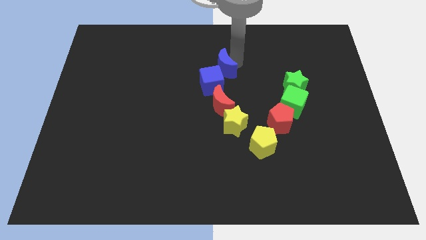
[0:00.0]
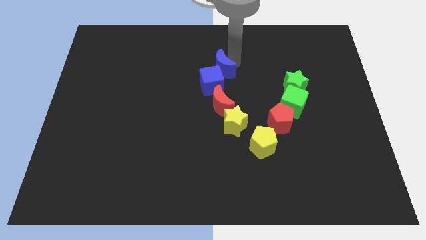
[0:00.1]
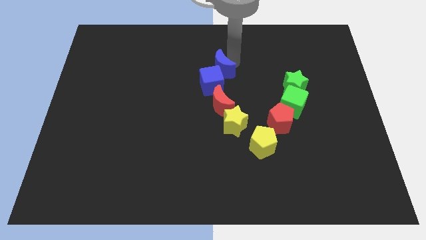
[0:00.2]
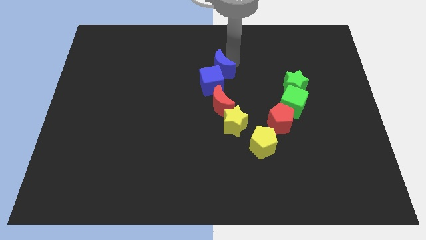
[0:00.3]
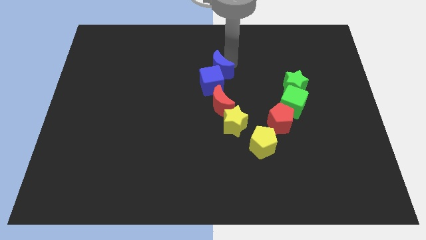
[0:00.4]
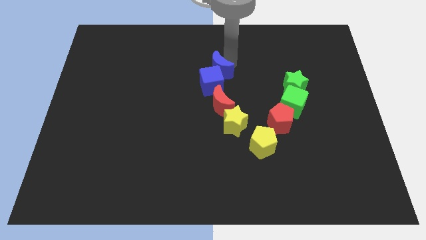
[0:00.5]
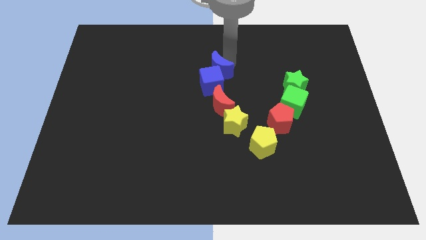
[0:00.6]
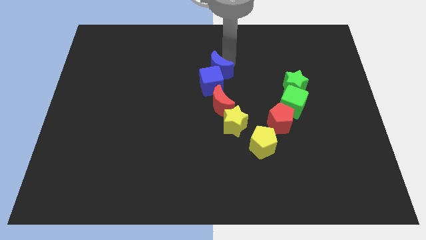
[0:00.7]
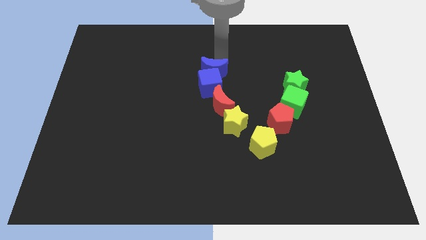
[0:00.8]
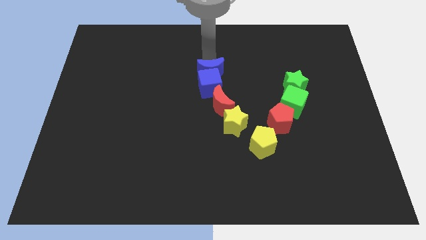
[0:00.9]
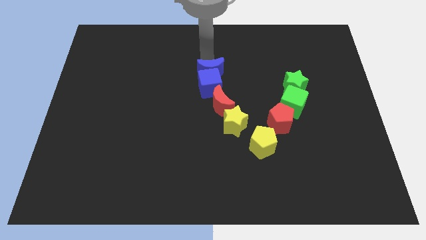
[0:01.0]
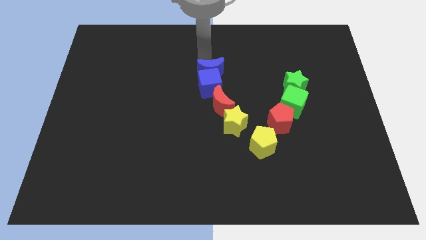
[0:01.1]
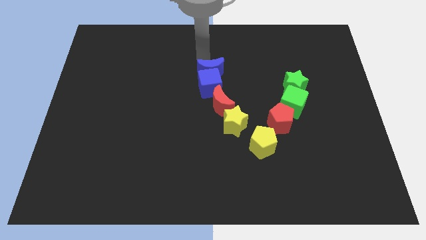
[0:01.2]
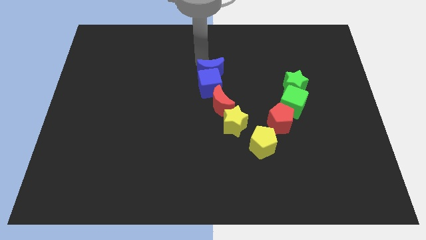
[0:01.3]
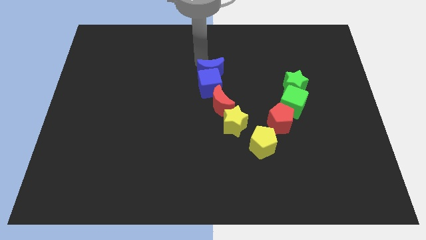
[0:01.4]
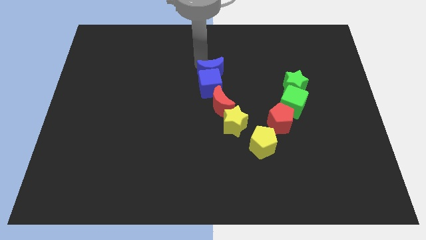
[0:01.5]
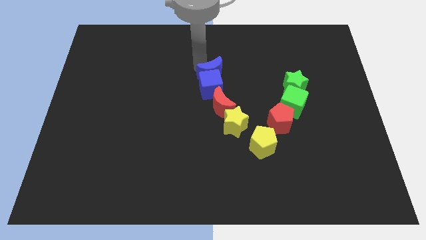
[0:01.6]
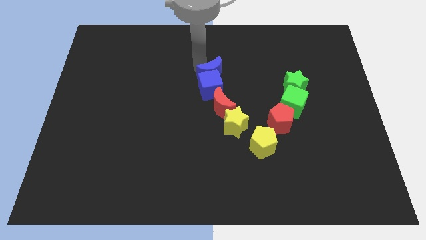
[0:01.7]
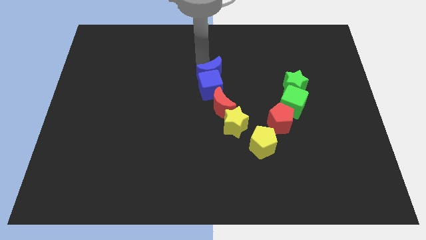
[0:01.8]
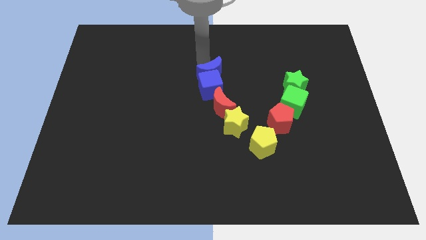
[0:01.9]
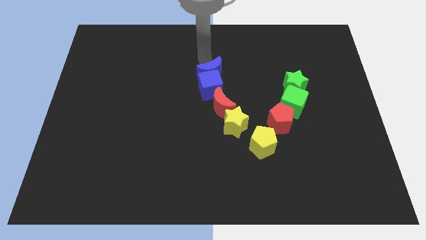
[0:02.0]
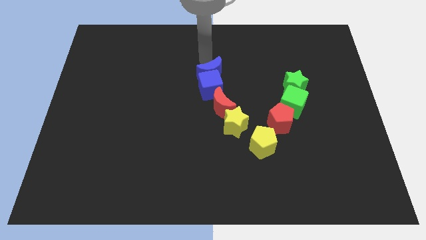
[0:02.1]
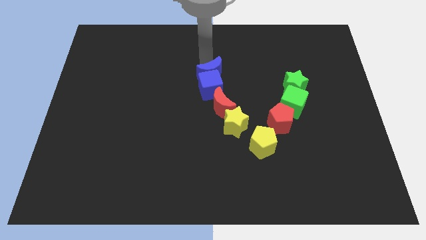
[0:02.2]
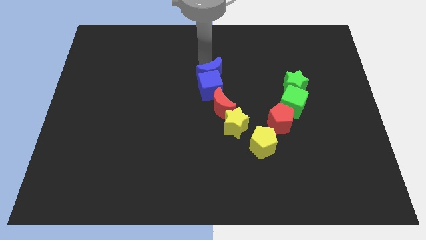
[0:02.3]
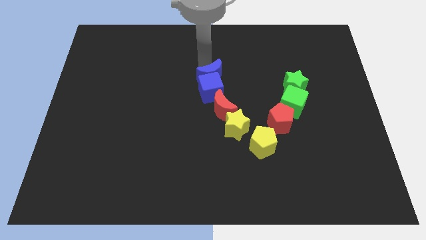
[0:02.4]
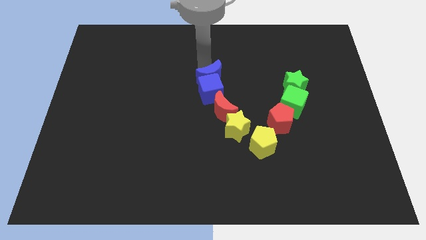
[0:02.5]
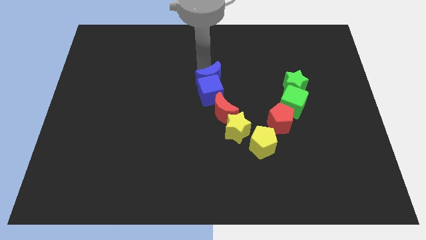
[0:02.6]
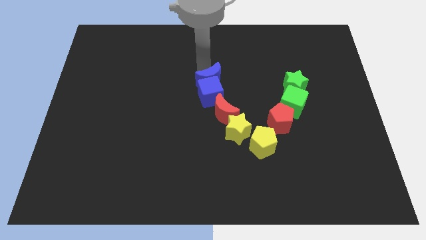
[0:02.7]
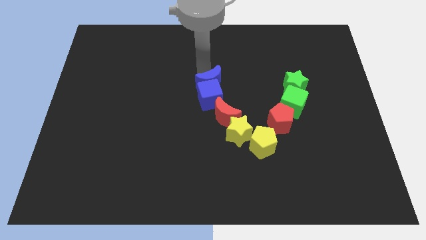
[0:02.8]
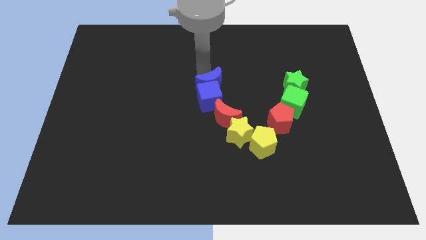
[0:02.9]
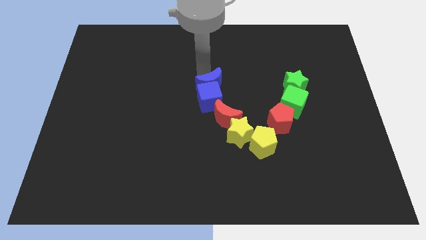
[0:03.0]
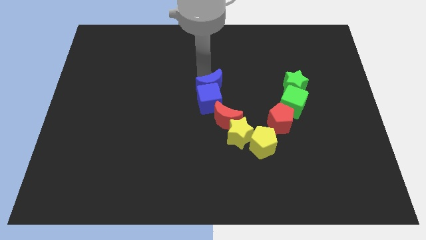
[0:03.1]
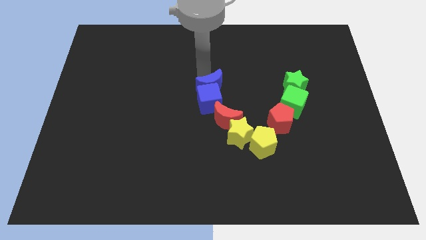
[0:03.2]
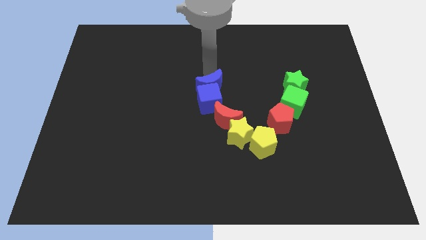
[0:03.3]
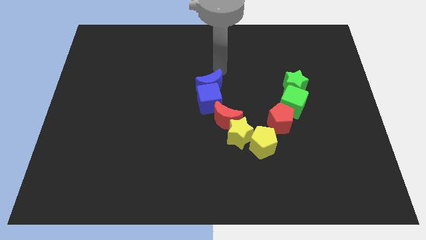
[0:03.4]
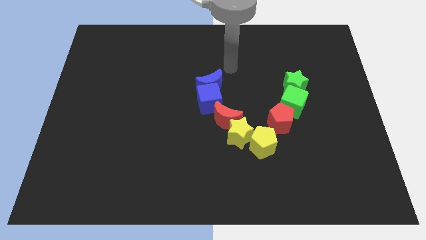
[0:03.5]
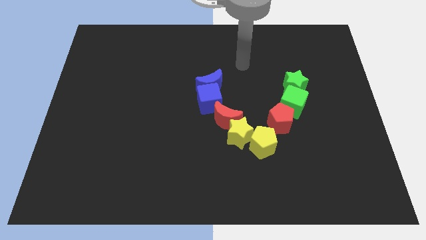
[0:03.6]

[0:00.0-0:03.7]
push the blue blocks red moon and yellow star towards the bottom side of the board

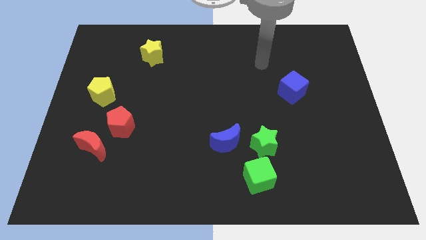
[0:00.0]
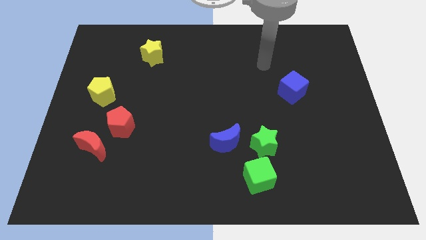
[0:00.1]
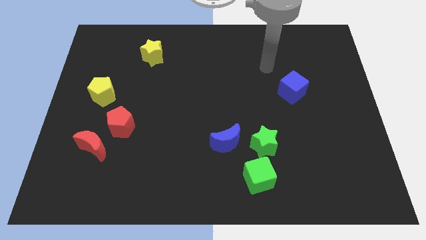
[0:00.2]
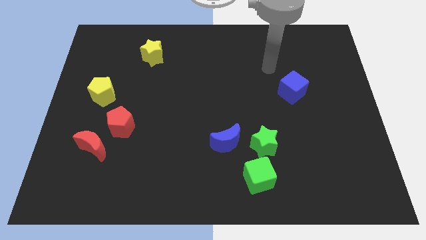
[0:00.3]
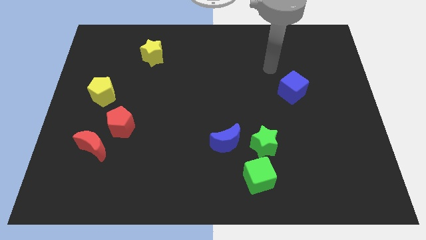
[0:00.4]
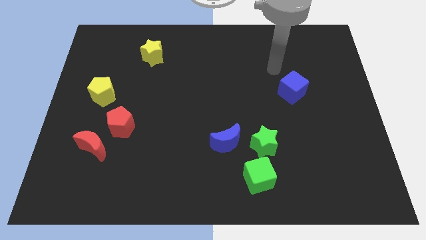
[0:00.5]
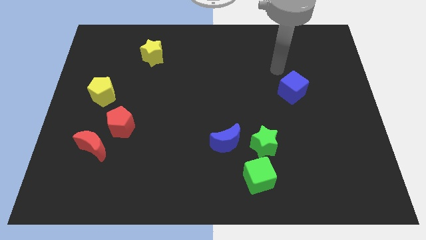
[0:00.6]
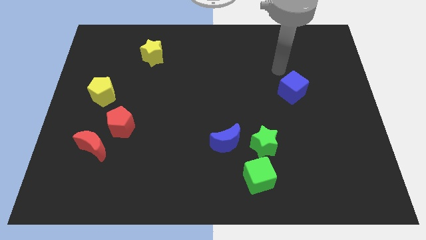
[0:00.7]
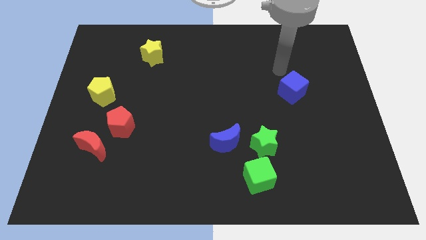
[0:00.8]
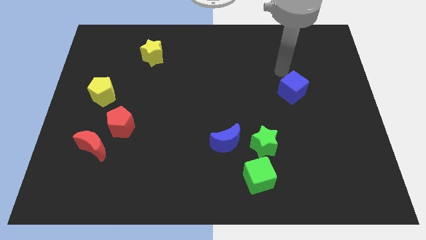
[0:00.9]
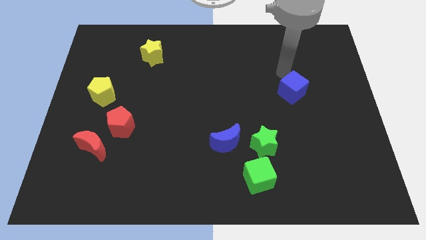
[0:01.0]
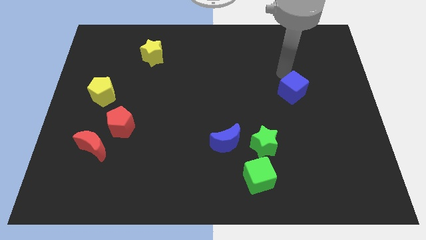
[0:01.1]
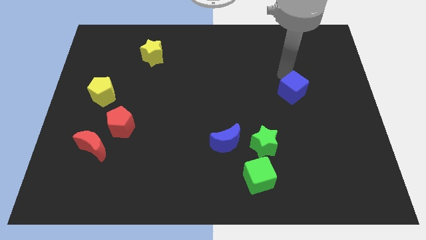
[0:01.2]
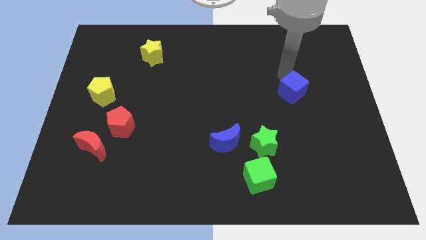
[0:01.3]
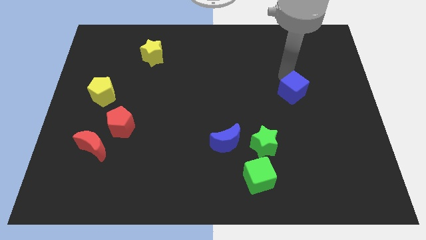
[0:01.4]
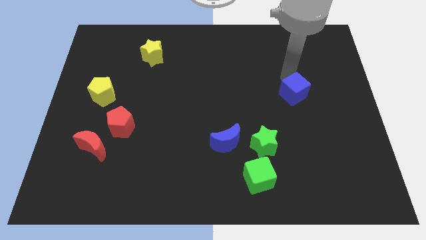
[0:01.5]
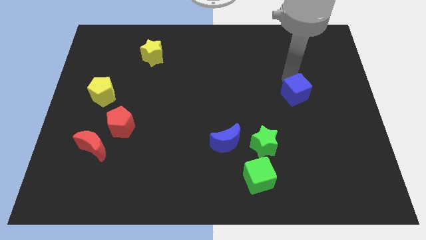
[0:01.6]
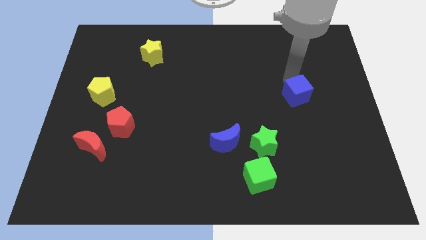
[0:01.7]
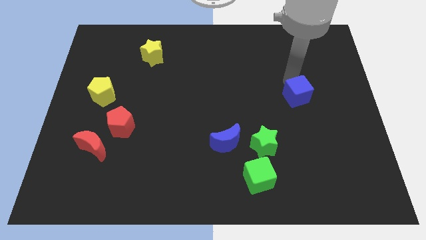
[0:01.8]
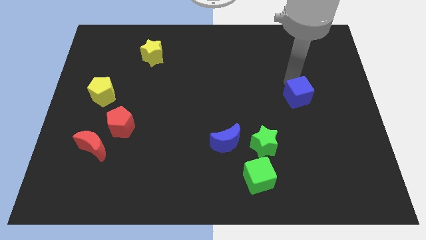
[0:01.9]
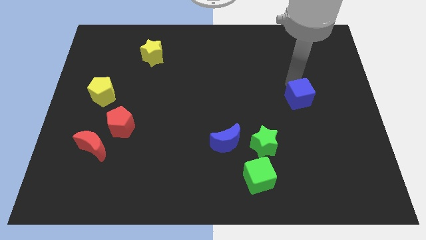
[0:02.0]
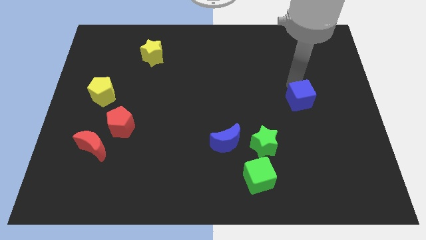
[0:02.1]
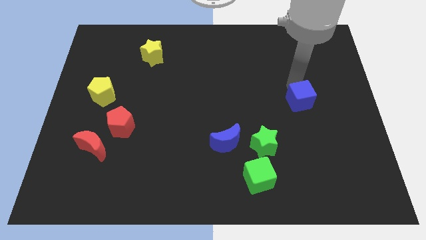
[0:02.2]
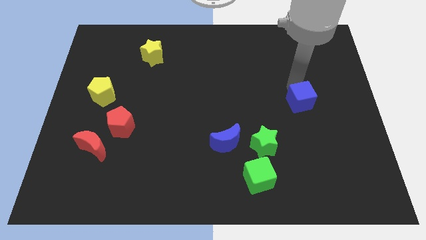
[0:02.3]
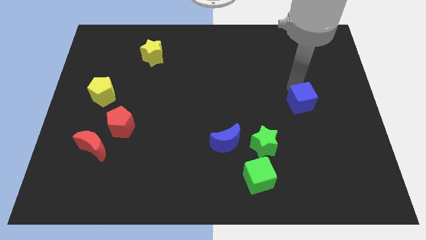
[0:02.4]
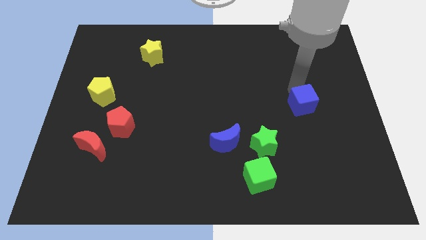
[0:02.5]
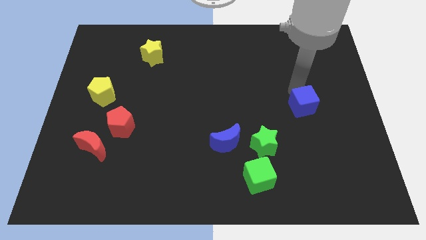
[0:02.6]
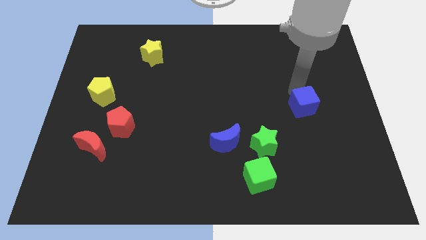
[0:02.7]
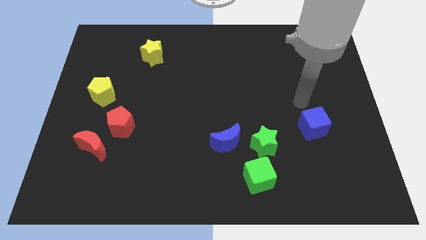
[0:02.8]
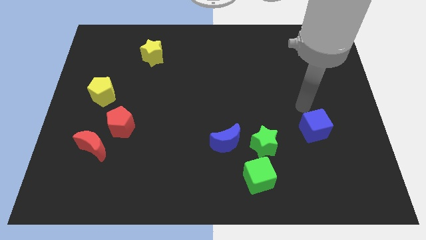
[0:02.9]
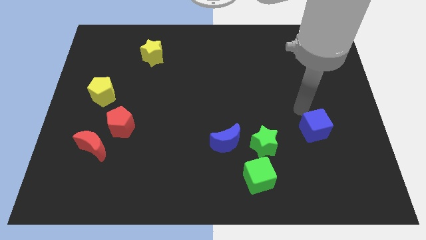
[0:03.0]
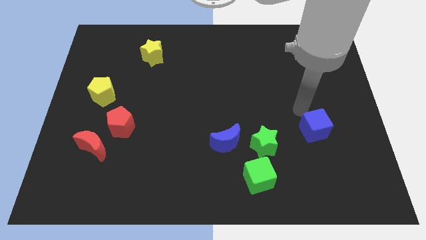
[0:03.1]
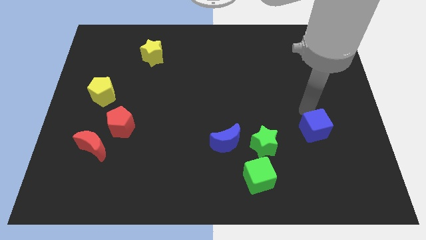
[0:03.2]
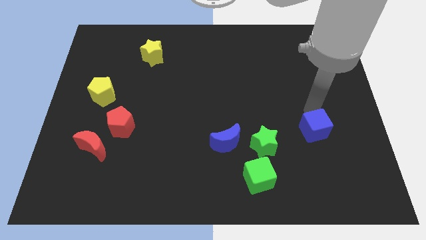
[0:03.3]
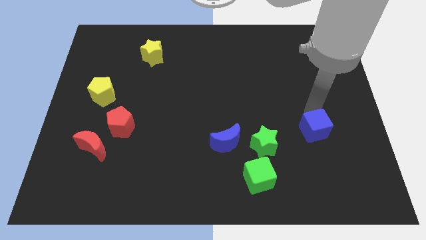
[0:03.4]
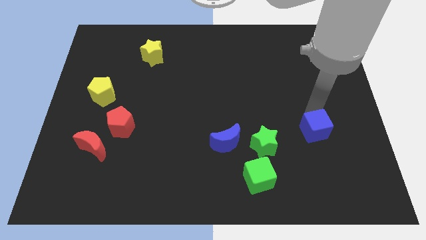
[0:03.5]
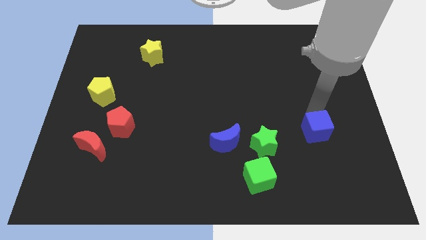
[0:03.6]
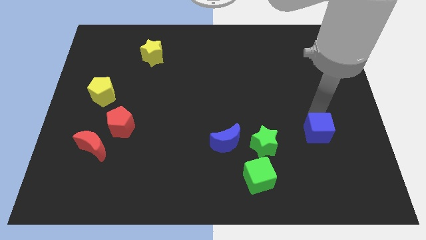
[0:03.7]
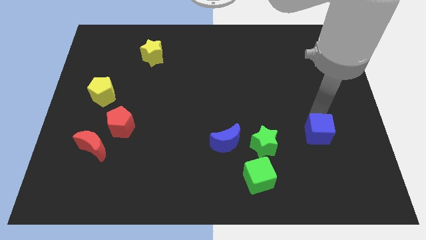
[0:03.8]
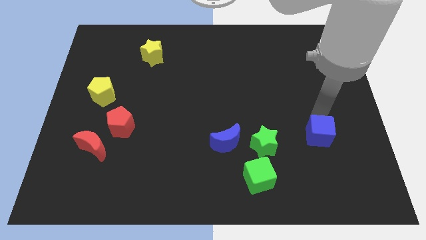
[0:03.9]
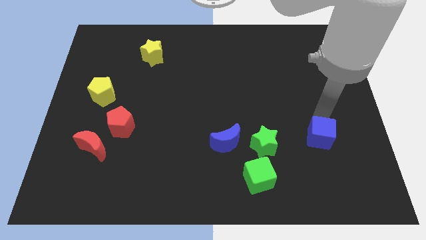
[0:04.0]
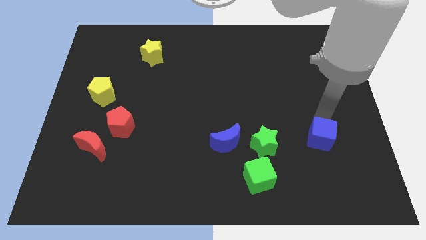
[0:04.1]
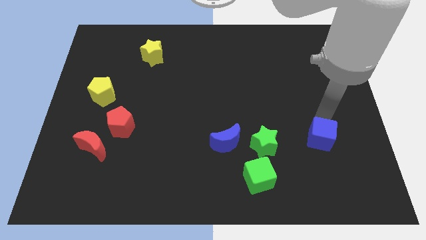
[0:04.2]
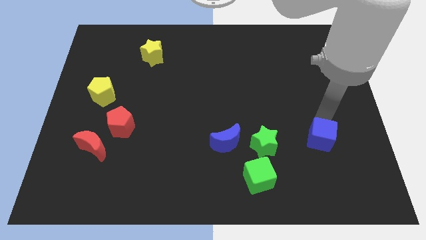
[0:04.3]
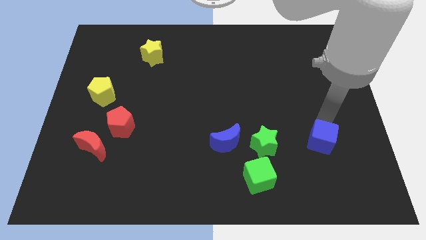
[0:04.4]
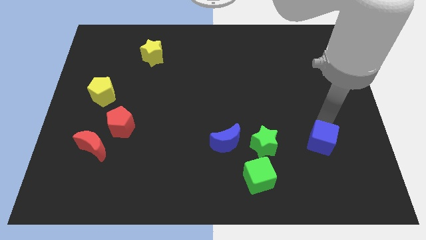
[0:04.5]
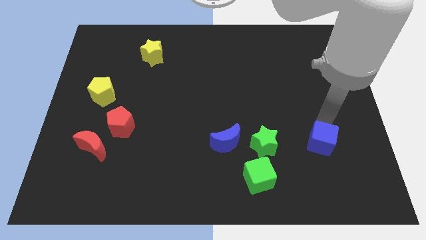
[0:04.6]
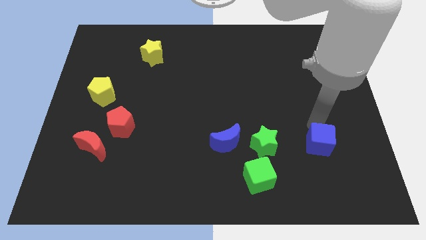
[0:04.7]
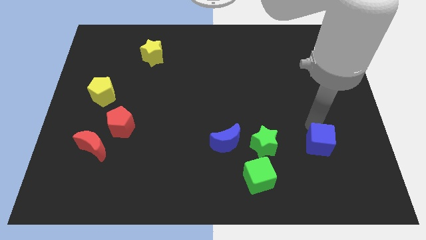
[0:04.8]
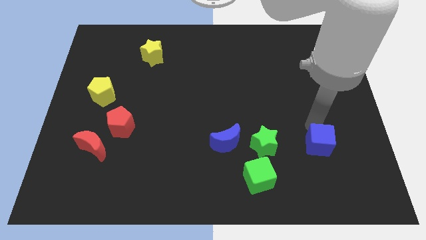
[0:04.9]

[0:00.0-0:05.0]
push blue cube to the right of green star

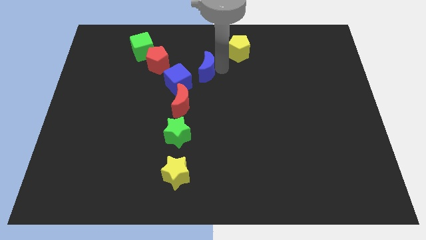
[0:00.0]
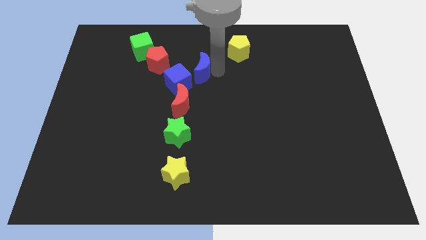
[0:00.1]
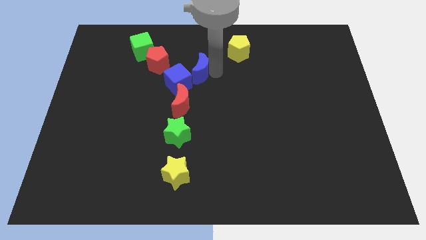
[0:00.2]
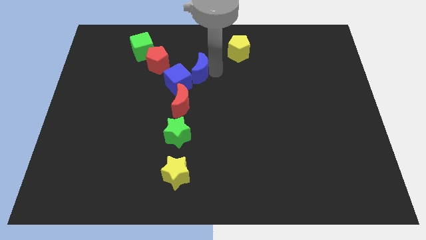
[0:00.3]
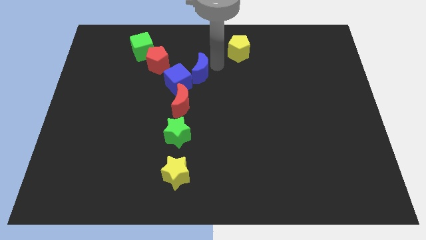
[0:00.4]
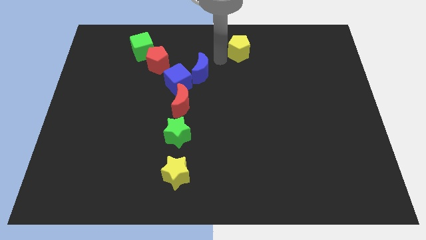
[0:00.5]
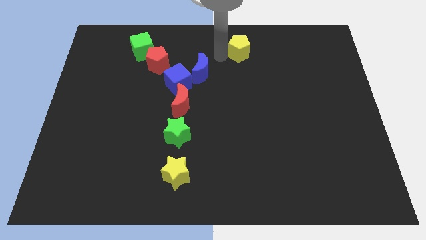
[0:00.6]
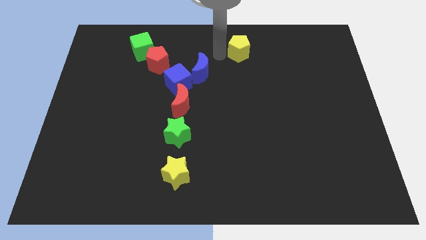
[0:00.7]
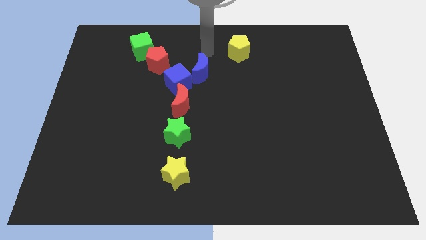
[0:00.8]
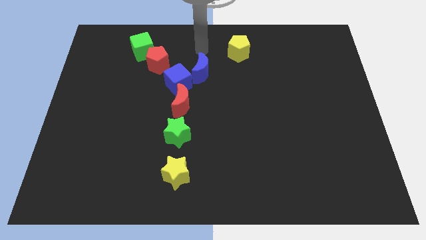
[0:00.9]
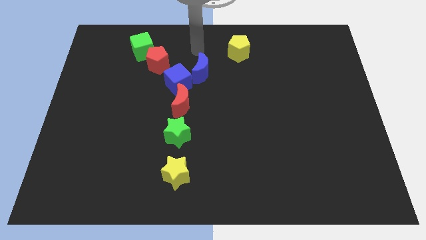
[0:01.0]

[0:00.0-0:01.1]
attach the blue crescent to the blue cube
